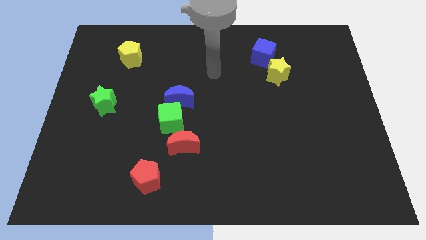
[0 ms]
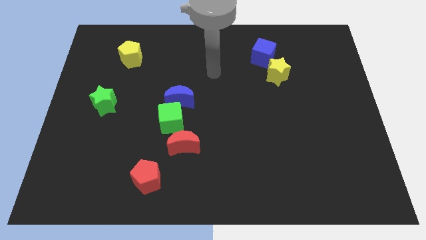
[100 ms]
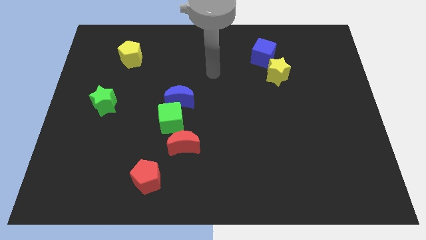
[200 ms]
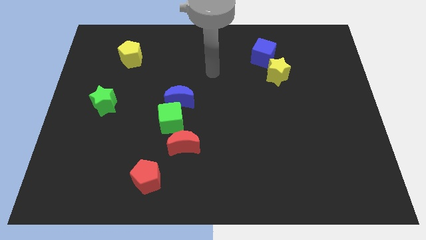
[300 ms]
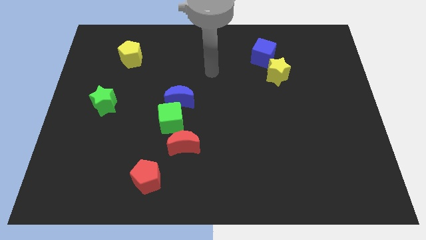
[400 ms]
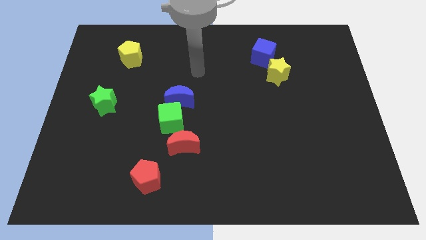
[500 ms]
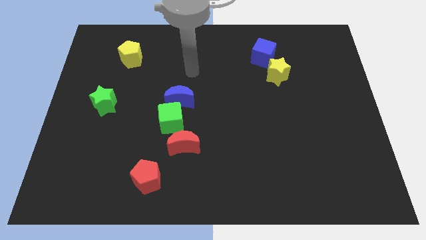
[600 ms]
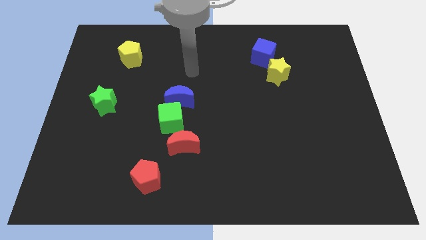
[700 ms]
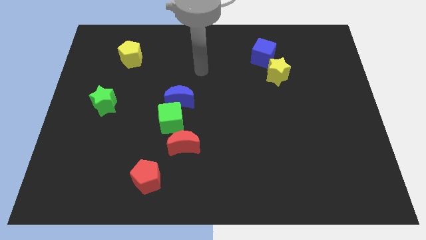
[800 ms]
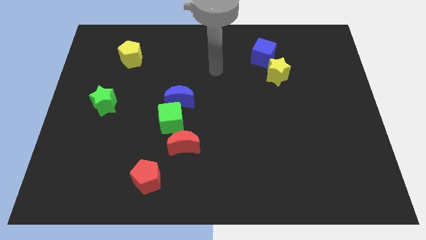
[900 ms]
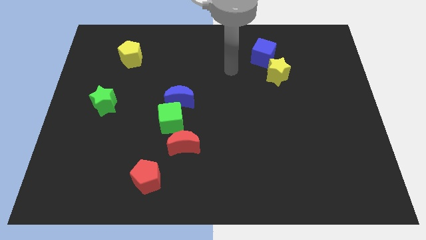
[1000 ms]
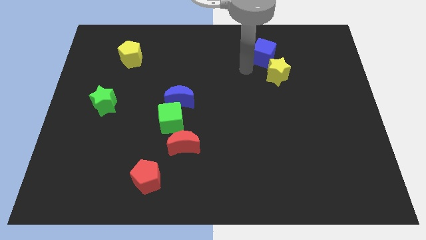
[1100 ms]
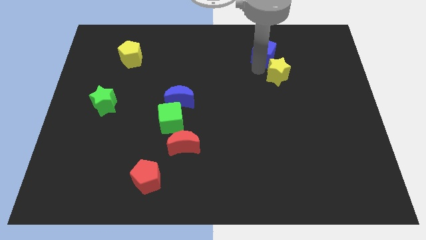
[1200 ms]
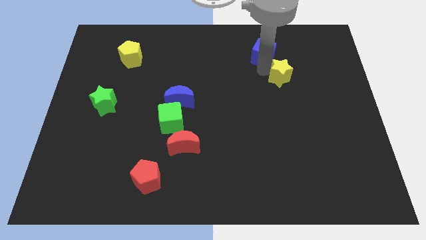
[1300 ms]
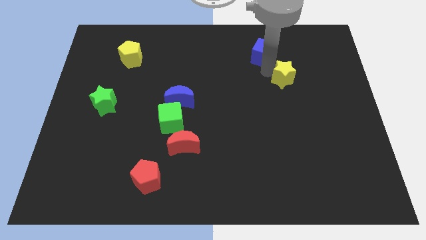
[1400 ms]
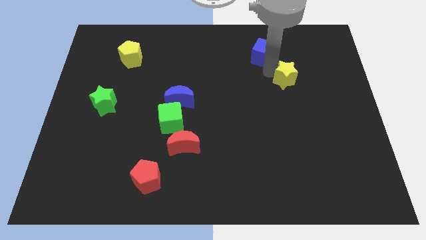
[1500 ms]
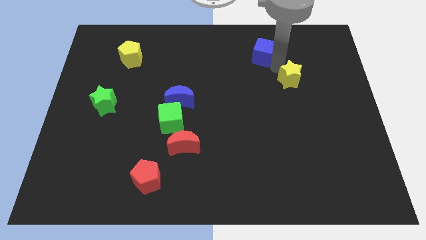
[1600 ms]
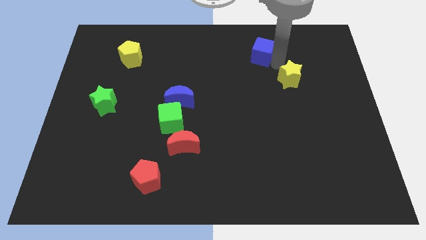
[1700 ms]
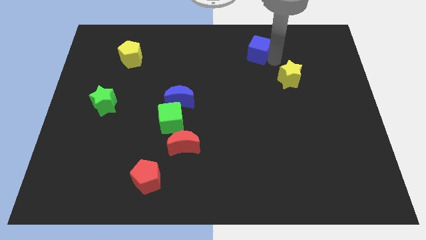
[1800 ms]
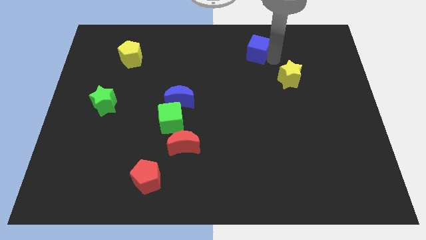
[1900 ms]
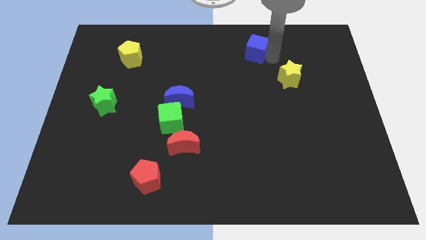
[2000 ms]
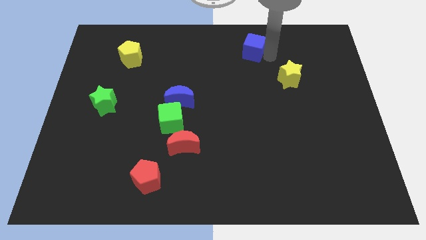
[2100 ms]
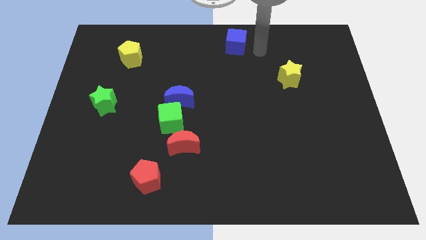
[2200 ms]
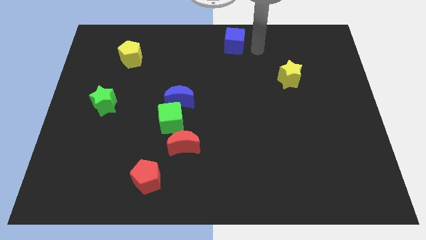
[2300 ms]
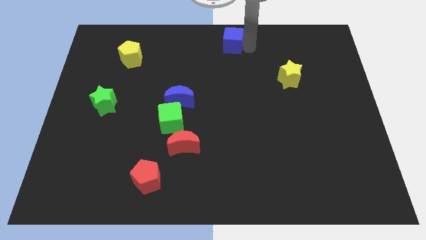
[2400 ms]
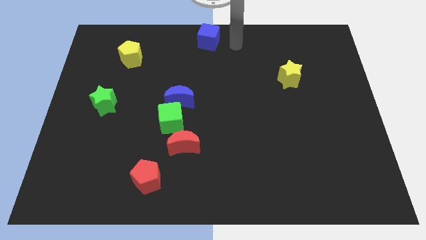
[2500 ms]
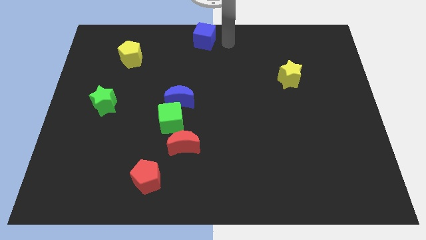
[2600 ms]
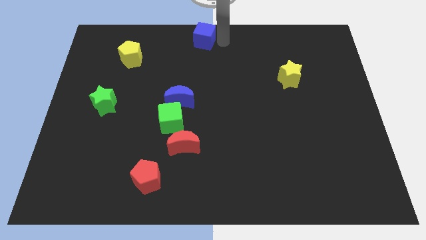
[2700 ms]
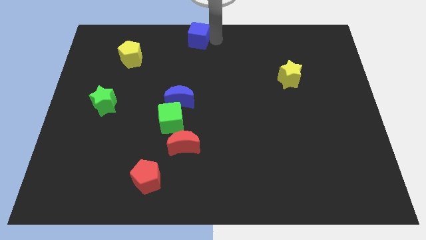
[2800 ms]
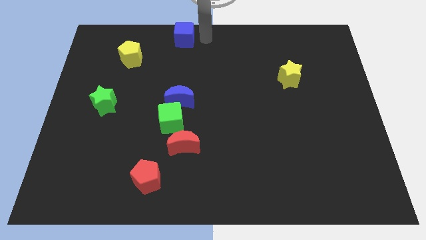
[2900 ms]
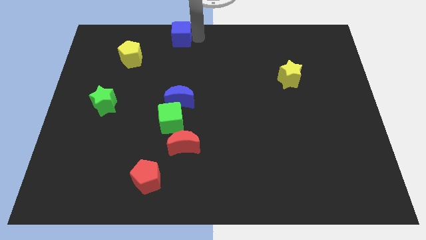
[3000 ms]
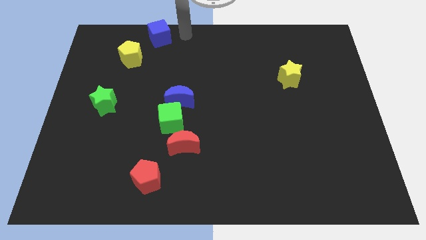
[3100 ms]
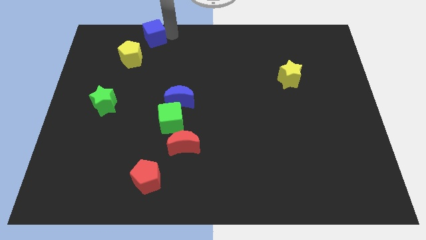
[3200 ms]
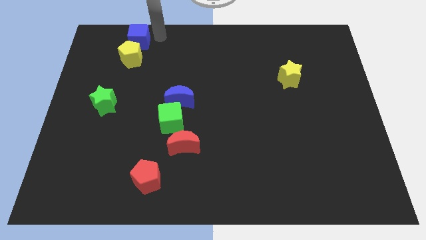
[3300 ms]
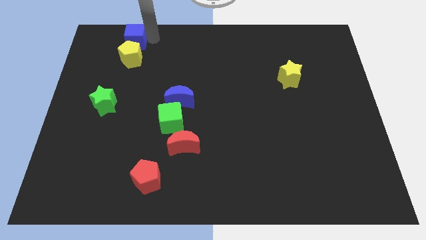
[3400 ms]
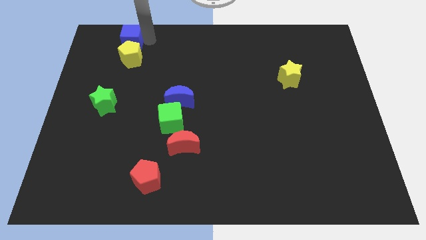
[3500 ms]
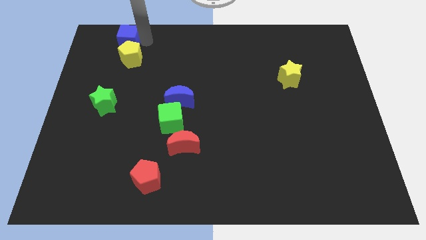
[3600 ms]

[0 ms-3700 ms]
drag the blue cube to the top side of the yellow pentagon

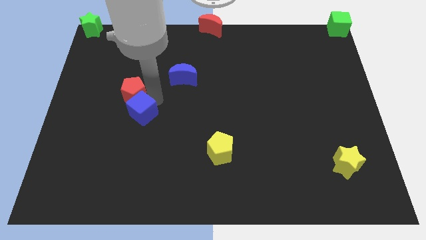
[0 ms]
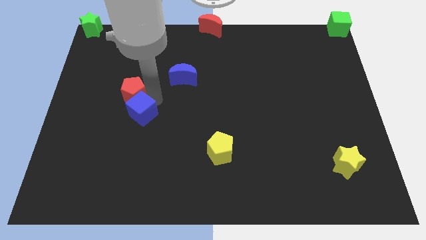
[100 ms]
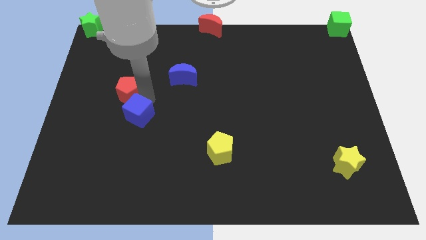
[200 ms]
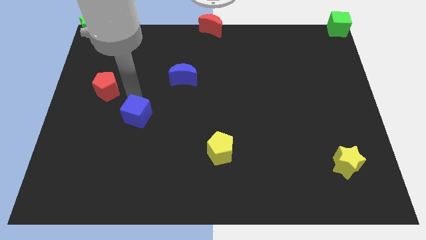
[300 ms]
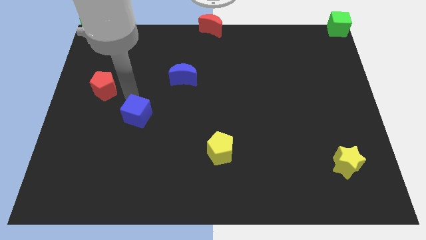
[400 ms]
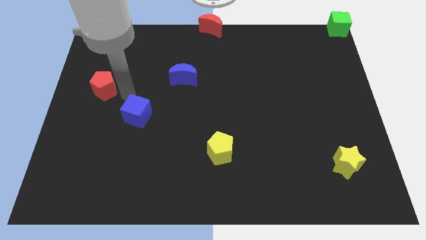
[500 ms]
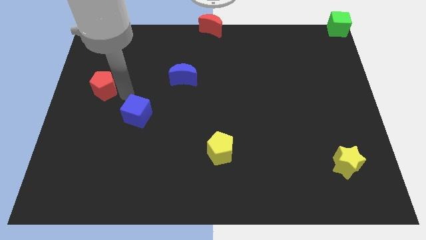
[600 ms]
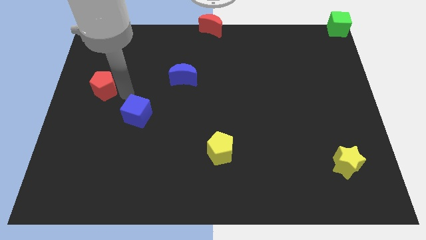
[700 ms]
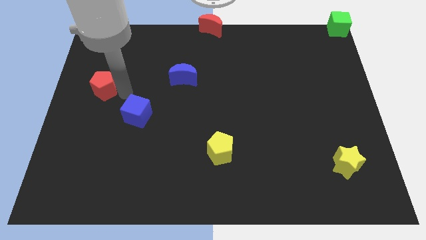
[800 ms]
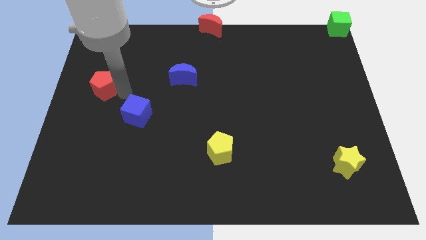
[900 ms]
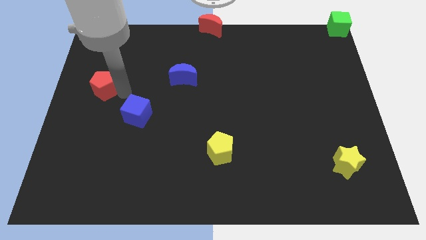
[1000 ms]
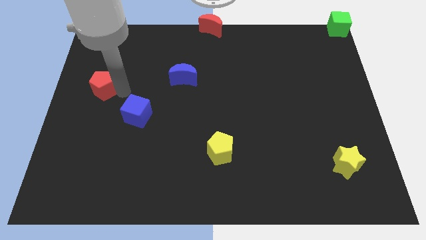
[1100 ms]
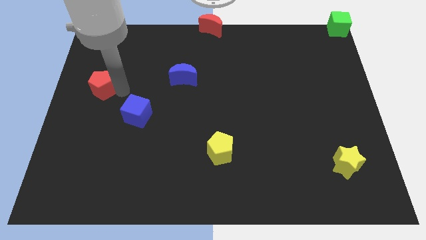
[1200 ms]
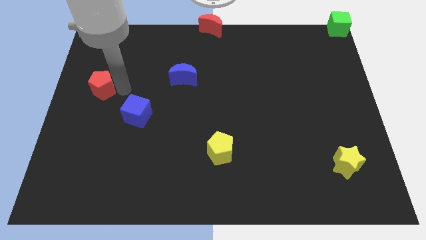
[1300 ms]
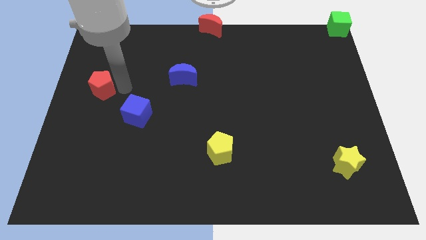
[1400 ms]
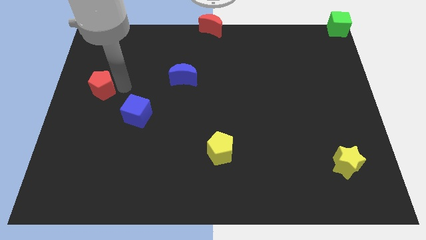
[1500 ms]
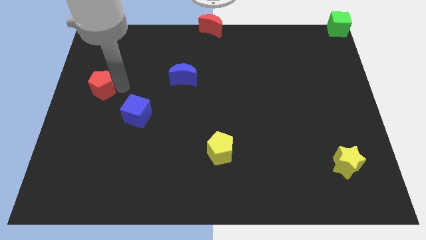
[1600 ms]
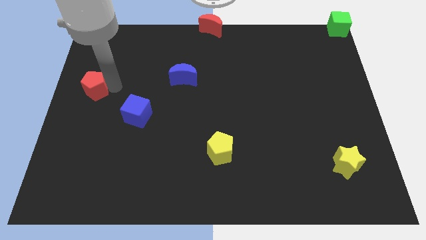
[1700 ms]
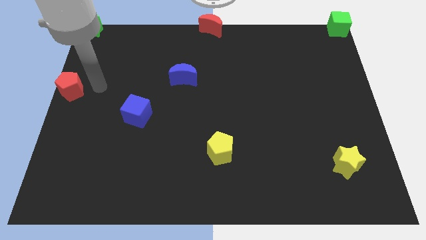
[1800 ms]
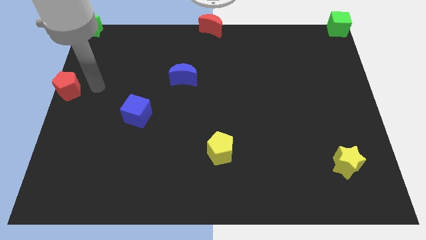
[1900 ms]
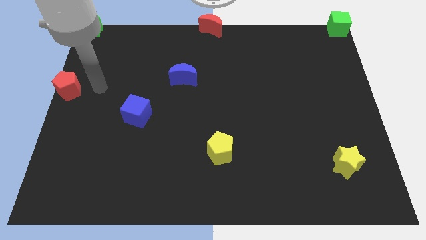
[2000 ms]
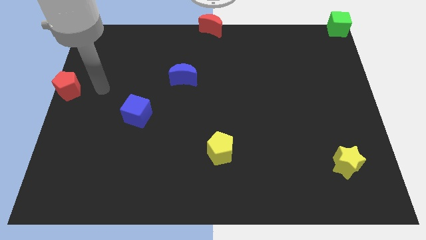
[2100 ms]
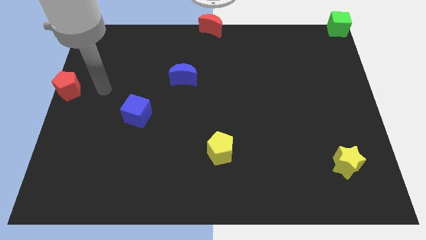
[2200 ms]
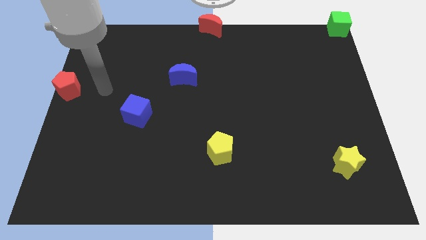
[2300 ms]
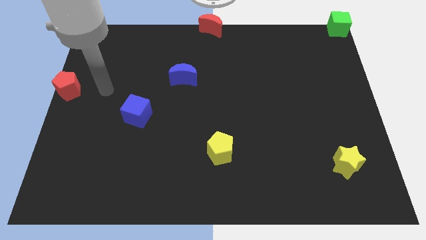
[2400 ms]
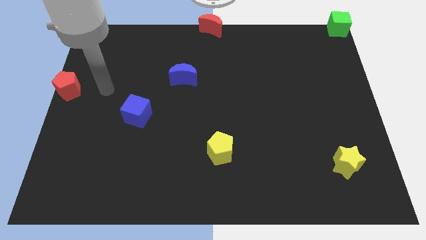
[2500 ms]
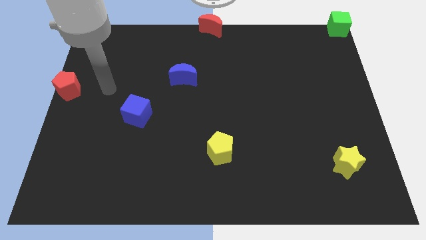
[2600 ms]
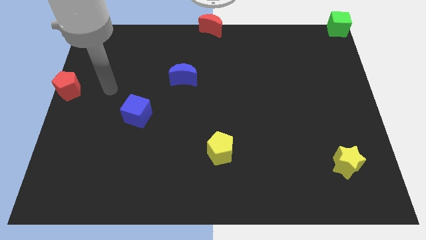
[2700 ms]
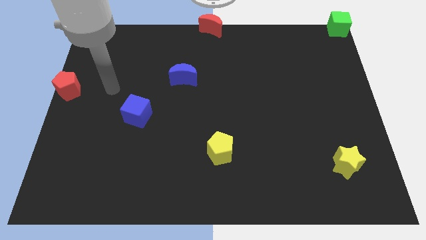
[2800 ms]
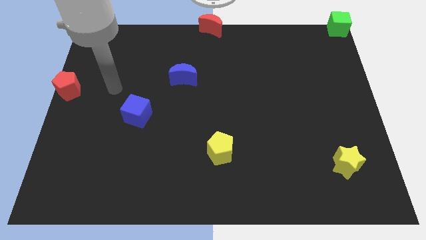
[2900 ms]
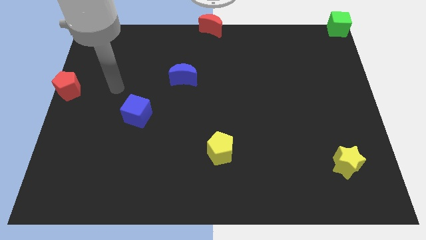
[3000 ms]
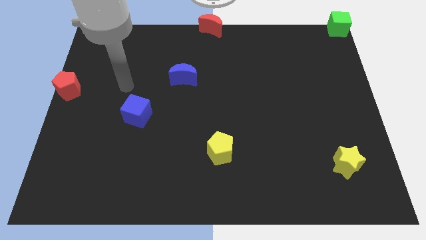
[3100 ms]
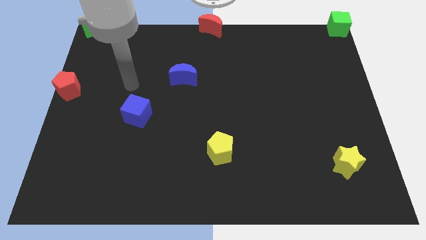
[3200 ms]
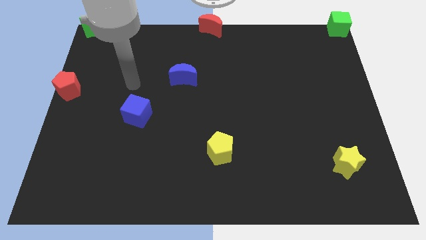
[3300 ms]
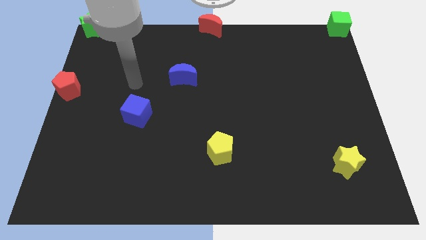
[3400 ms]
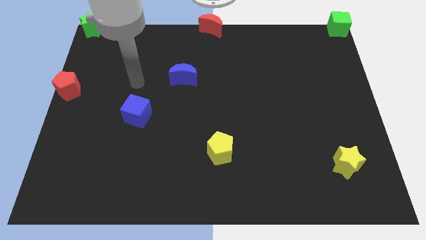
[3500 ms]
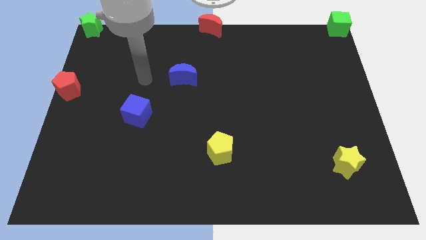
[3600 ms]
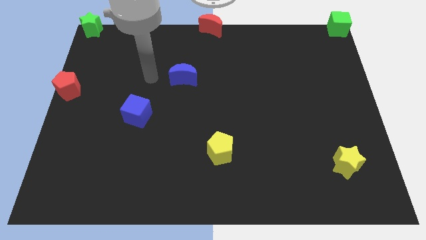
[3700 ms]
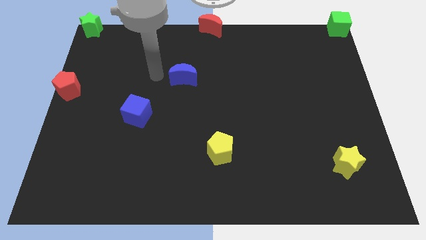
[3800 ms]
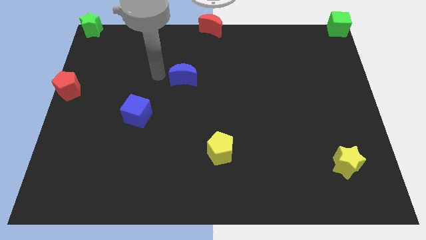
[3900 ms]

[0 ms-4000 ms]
push the red pentagon to the center left of the board

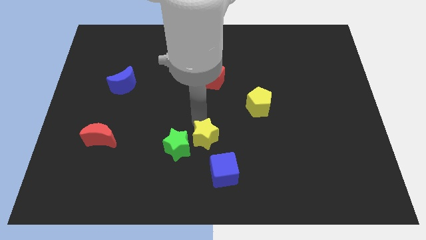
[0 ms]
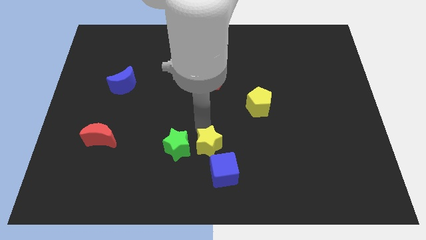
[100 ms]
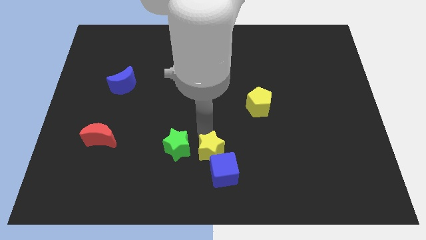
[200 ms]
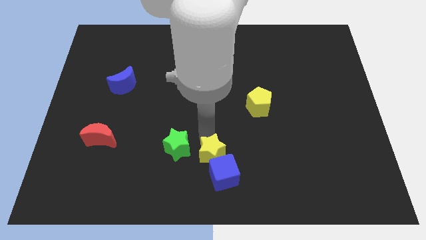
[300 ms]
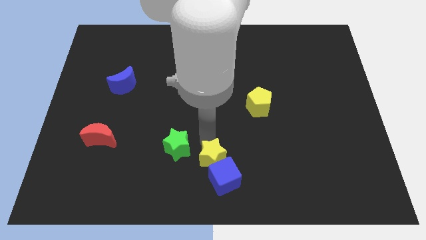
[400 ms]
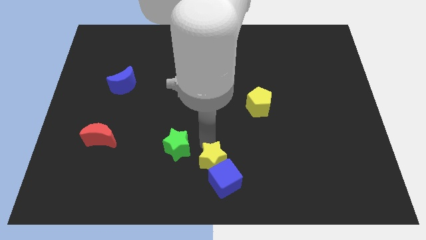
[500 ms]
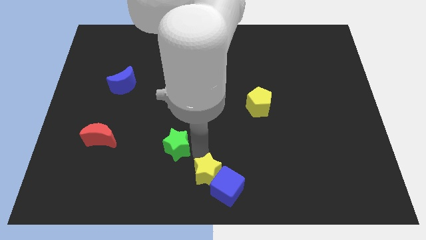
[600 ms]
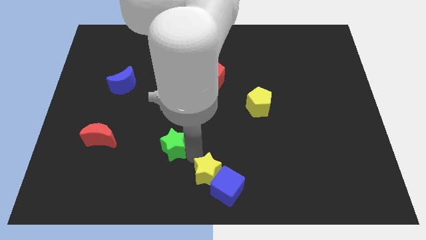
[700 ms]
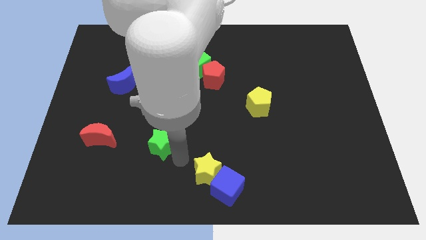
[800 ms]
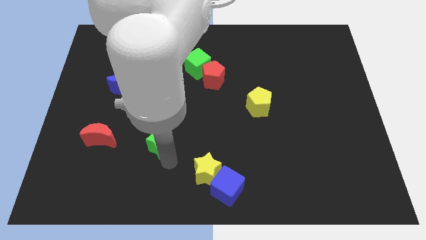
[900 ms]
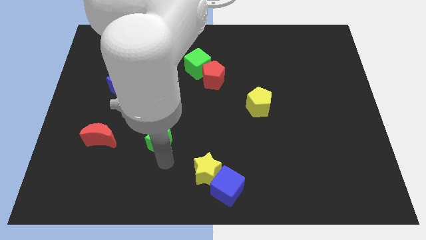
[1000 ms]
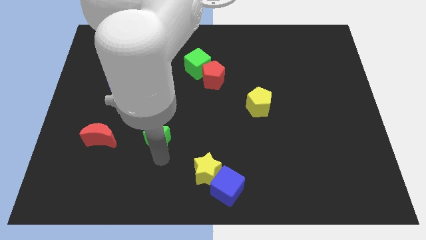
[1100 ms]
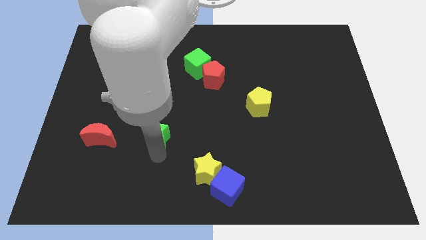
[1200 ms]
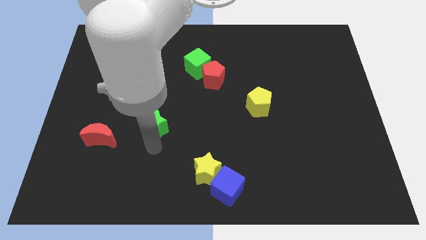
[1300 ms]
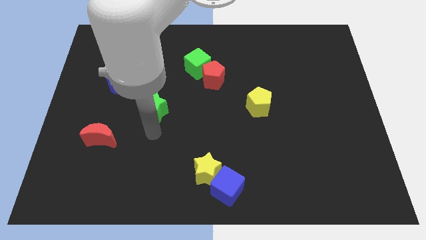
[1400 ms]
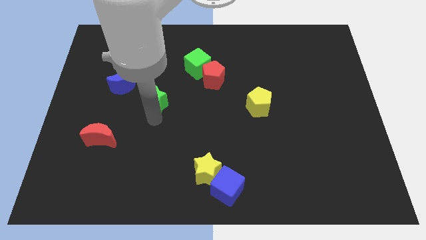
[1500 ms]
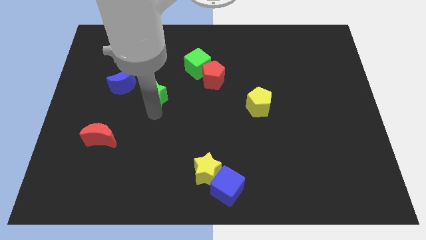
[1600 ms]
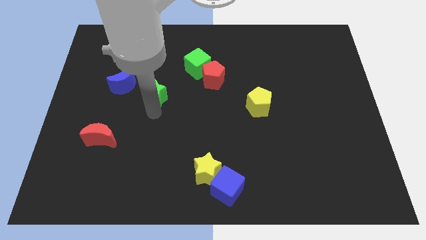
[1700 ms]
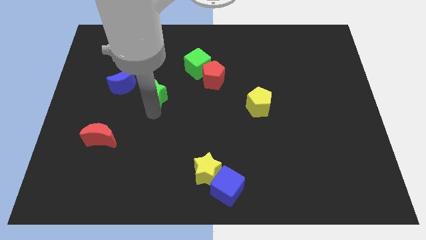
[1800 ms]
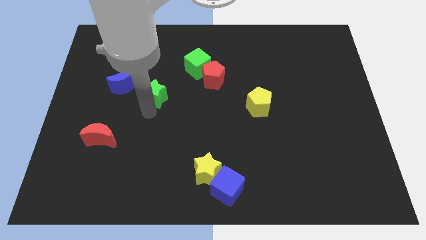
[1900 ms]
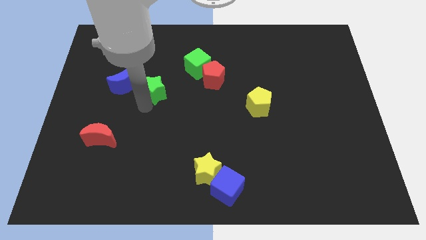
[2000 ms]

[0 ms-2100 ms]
place the green star diagonally to the blue crescent
